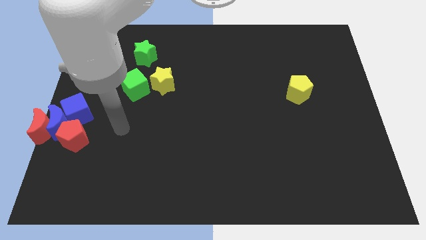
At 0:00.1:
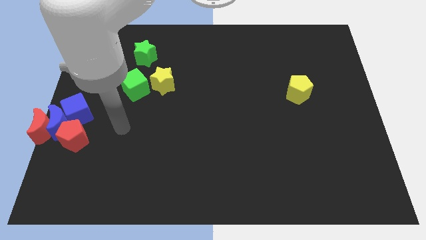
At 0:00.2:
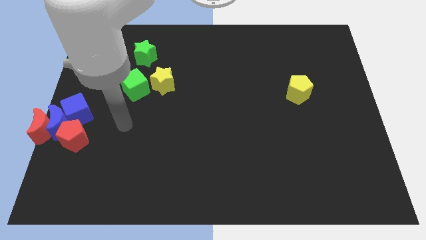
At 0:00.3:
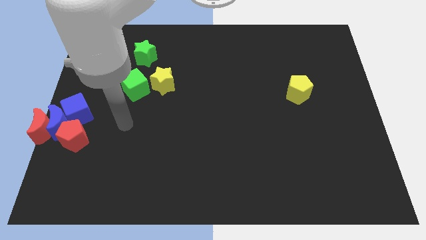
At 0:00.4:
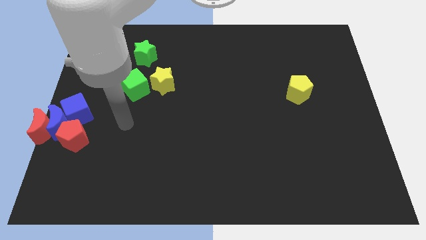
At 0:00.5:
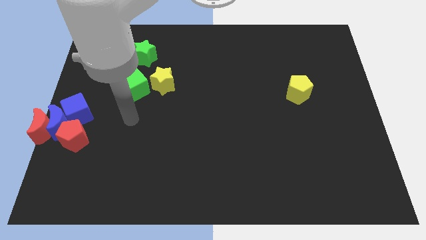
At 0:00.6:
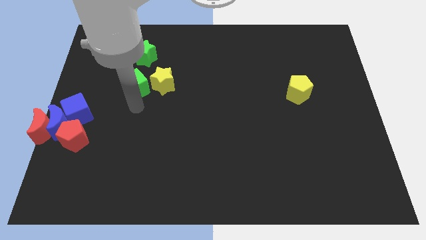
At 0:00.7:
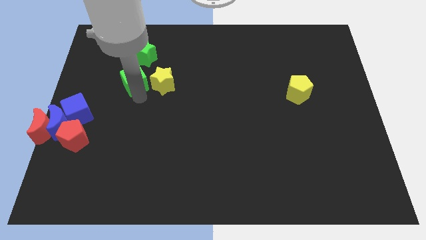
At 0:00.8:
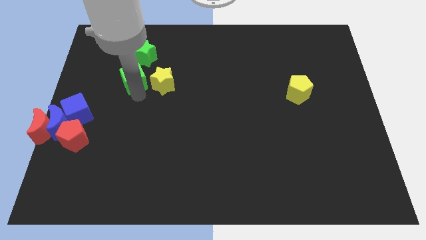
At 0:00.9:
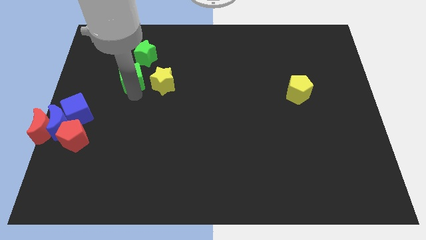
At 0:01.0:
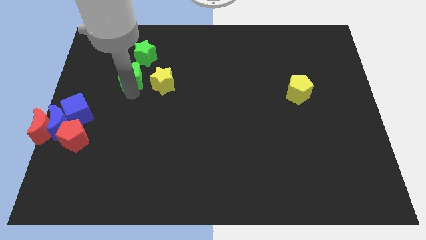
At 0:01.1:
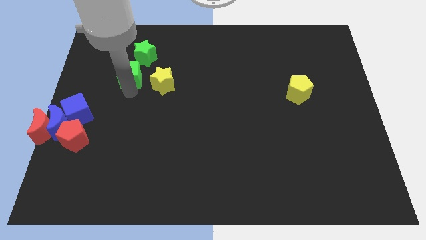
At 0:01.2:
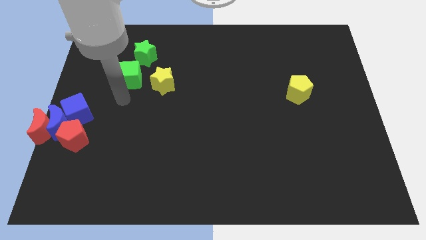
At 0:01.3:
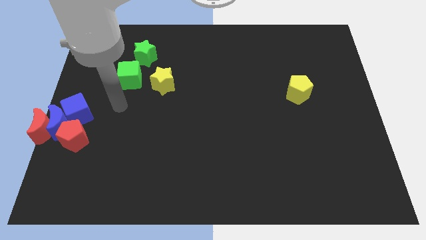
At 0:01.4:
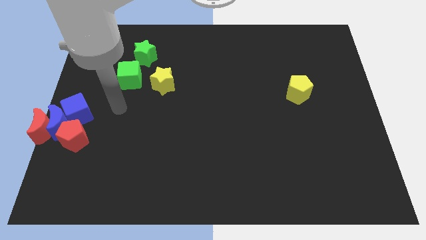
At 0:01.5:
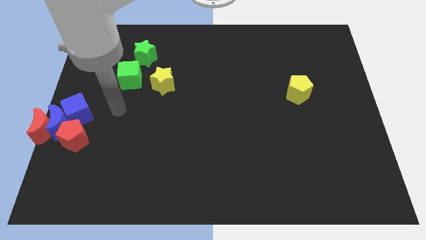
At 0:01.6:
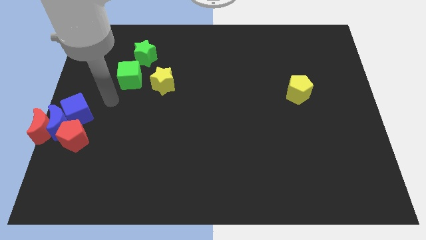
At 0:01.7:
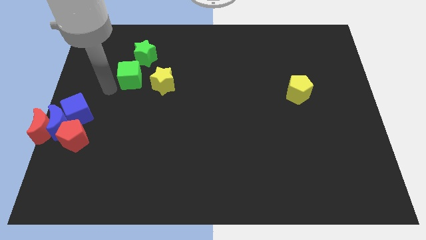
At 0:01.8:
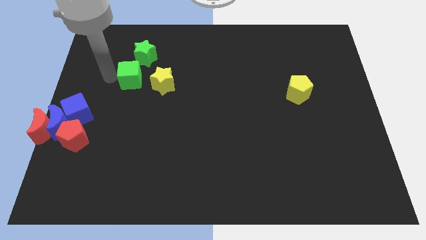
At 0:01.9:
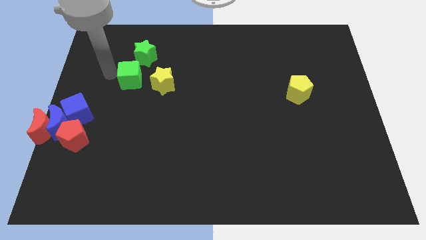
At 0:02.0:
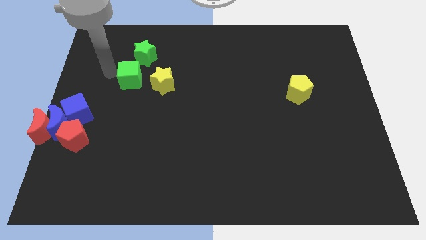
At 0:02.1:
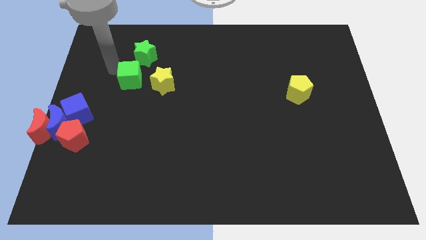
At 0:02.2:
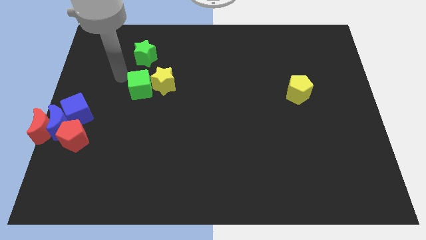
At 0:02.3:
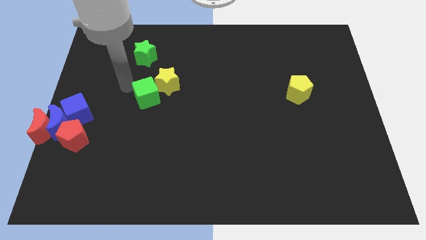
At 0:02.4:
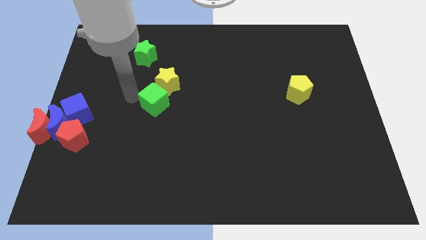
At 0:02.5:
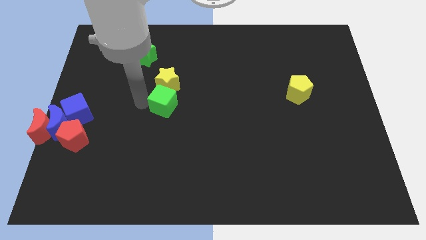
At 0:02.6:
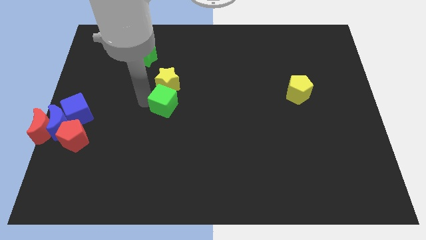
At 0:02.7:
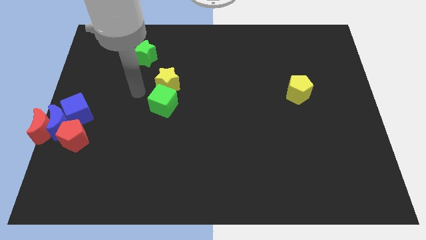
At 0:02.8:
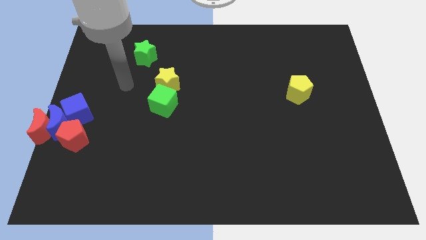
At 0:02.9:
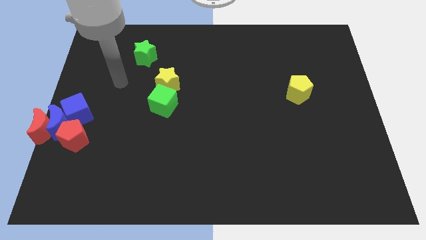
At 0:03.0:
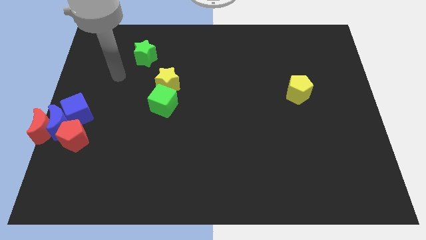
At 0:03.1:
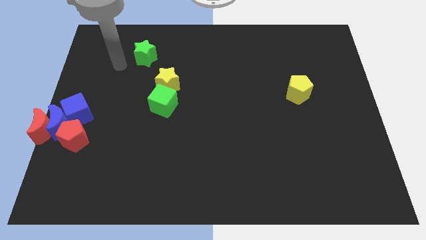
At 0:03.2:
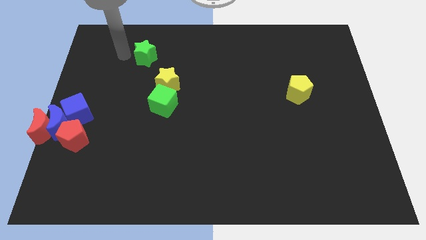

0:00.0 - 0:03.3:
drag the green cube to the bottom of the yellow star

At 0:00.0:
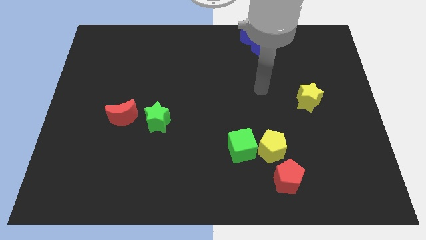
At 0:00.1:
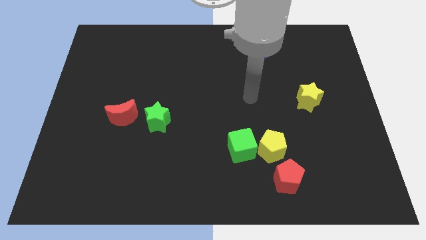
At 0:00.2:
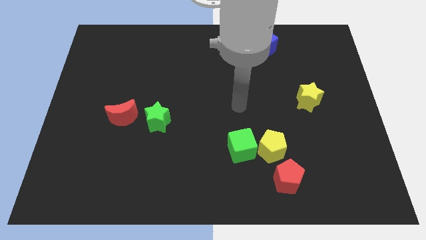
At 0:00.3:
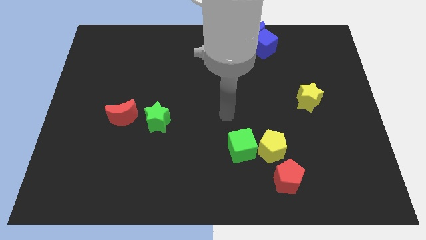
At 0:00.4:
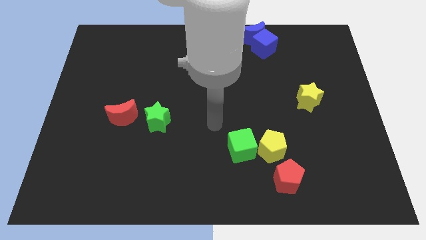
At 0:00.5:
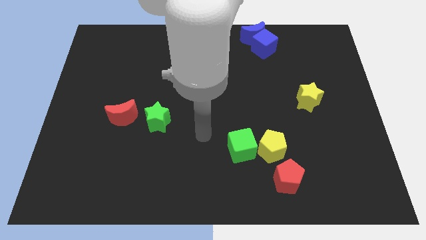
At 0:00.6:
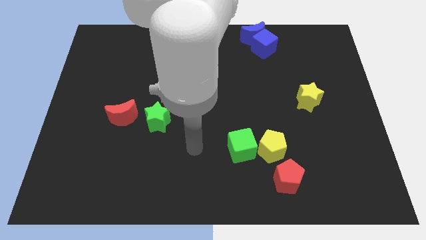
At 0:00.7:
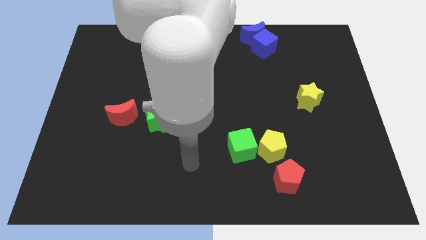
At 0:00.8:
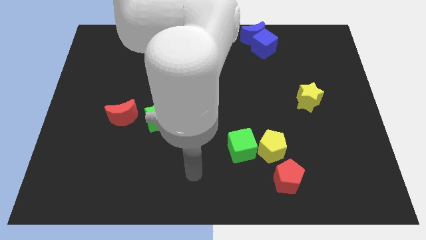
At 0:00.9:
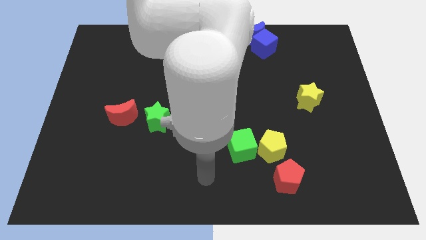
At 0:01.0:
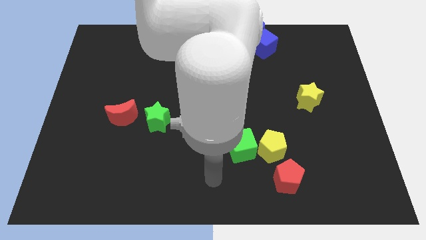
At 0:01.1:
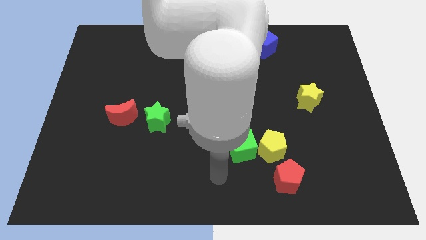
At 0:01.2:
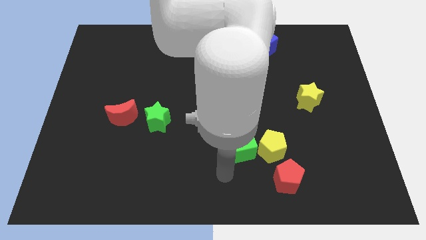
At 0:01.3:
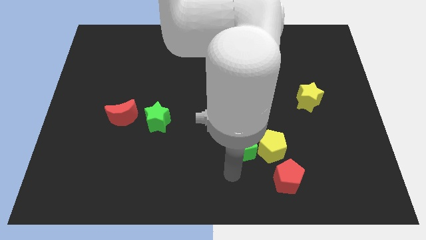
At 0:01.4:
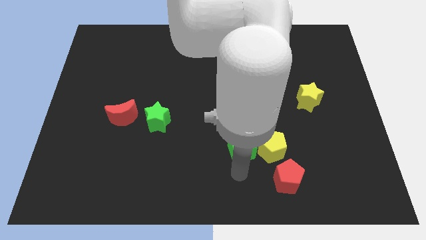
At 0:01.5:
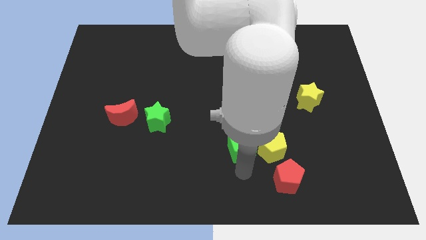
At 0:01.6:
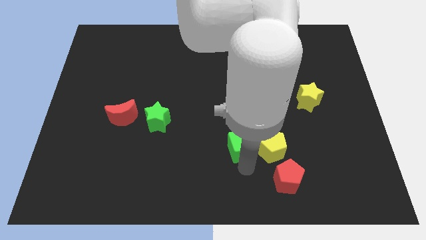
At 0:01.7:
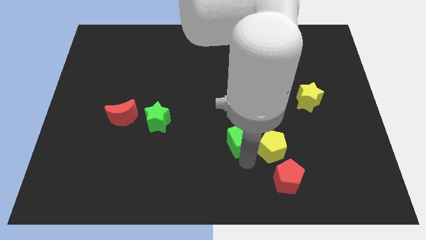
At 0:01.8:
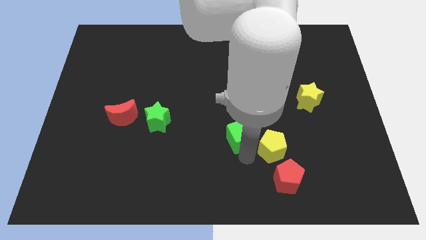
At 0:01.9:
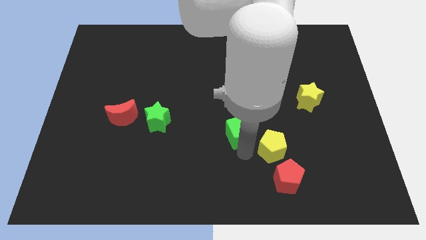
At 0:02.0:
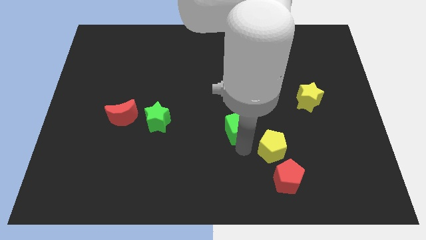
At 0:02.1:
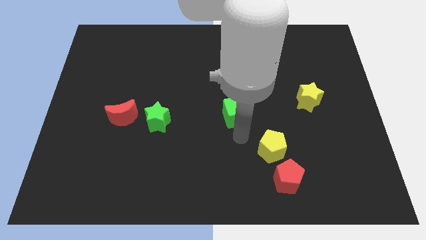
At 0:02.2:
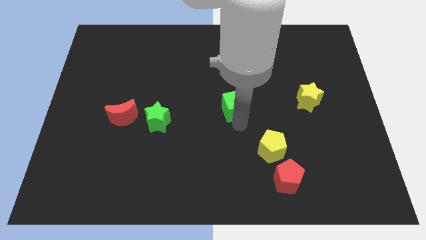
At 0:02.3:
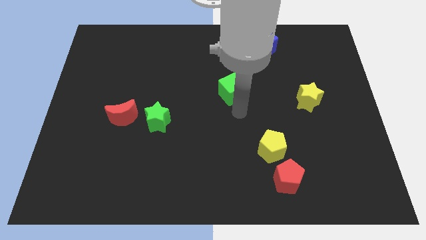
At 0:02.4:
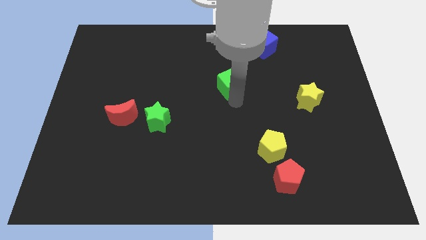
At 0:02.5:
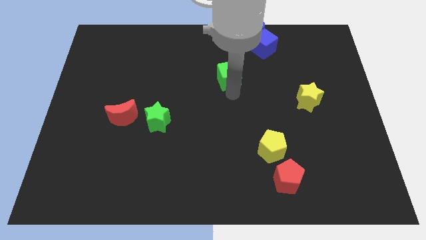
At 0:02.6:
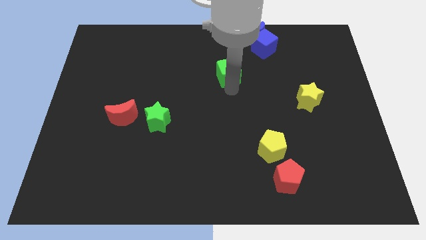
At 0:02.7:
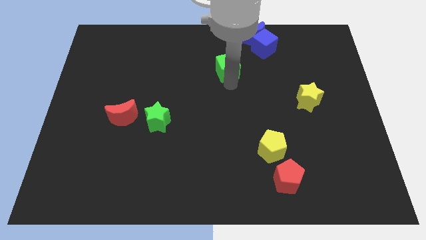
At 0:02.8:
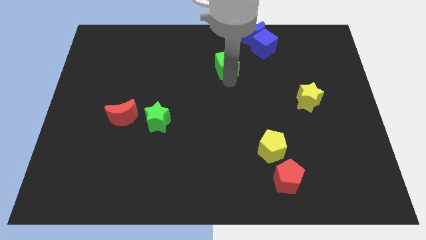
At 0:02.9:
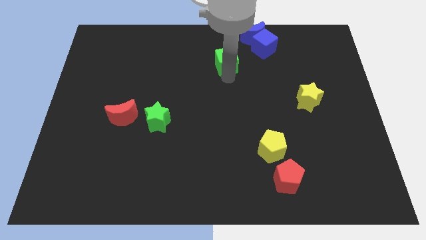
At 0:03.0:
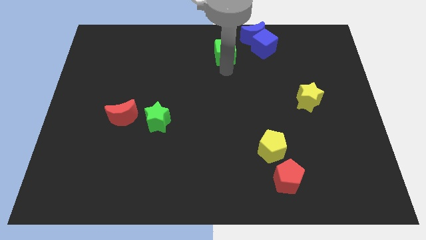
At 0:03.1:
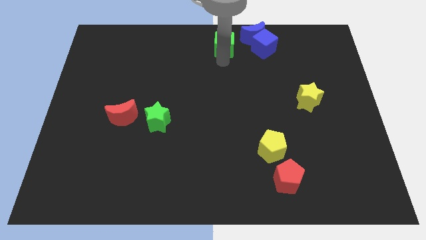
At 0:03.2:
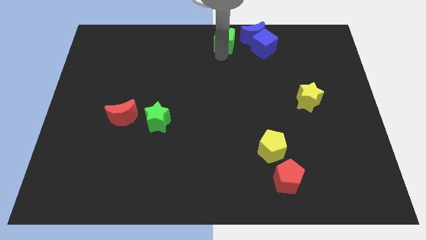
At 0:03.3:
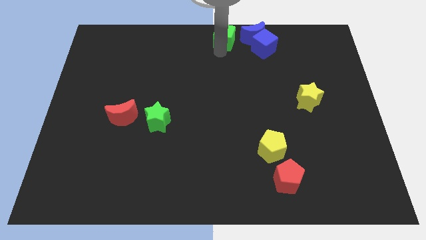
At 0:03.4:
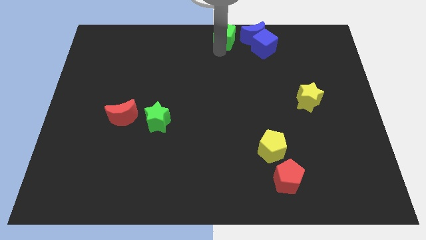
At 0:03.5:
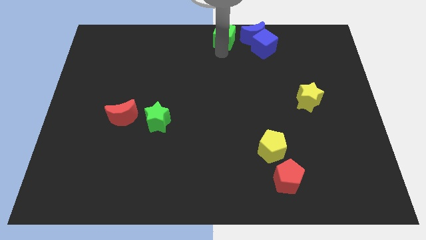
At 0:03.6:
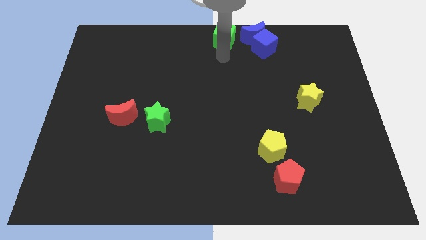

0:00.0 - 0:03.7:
place the green cube at top center of the board

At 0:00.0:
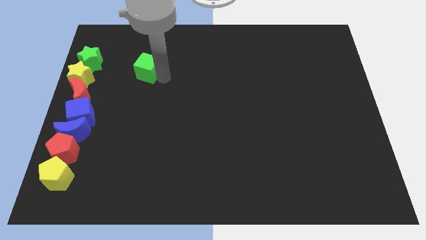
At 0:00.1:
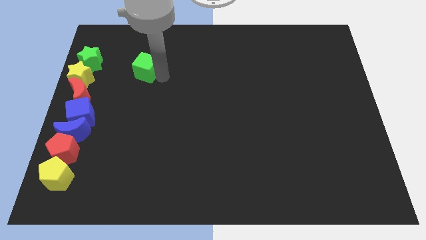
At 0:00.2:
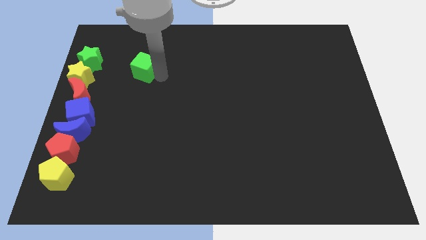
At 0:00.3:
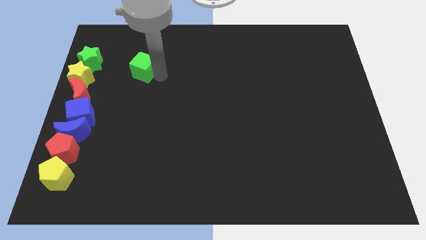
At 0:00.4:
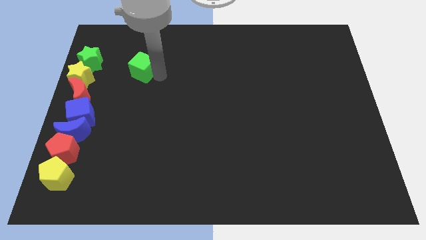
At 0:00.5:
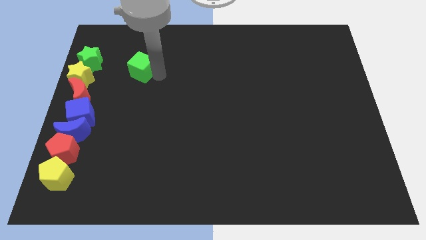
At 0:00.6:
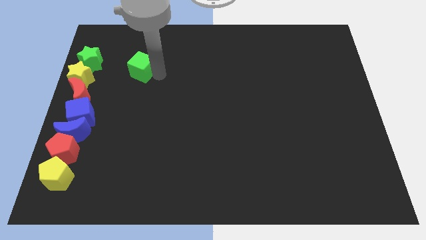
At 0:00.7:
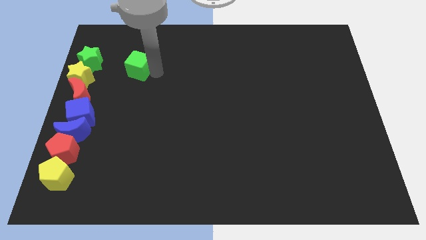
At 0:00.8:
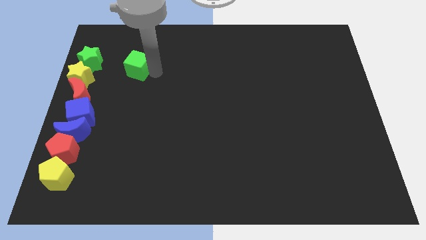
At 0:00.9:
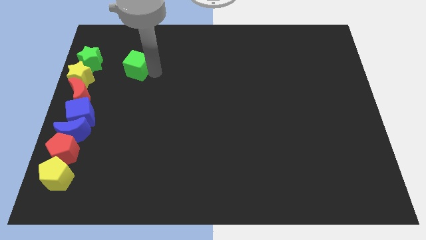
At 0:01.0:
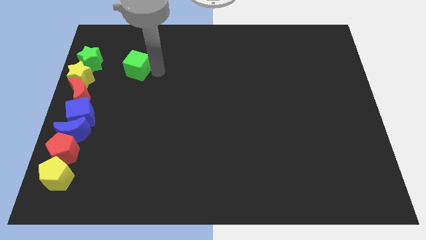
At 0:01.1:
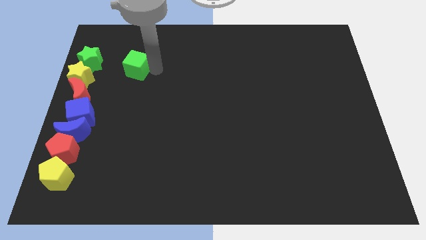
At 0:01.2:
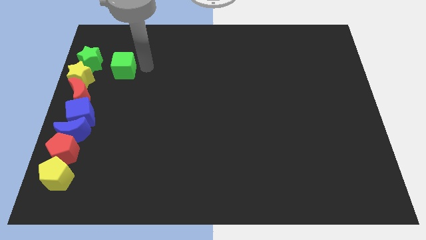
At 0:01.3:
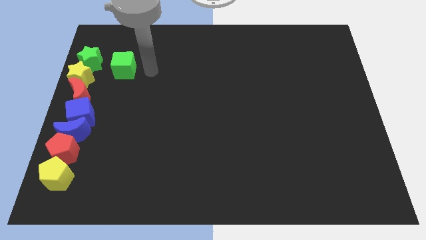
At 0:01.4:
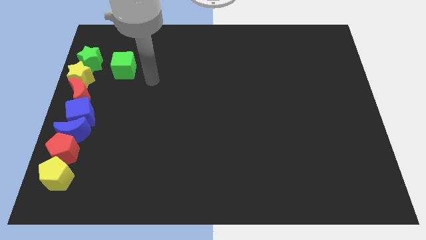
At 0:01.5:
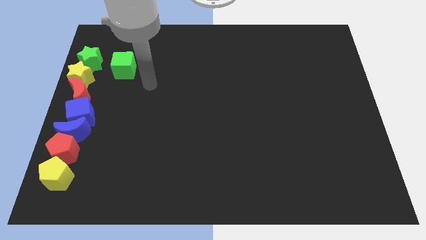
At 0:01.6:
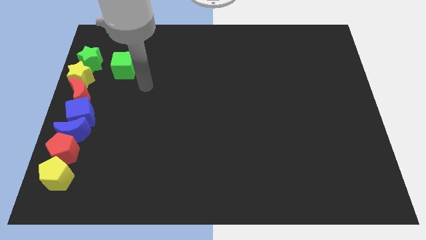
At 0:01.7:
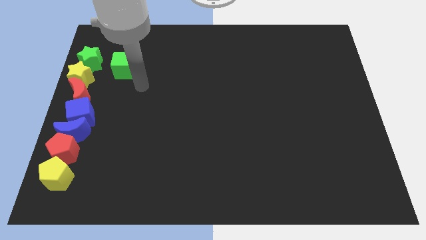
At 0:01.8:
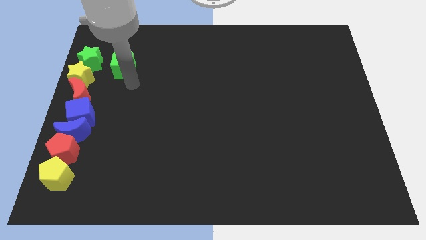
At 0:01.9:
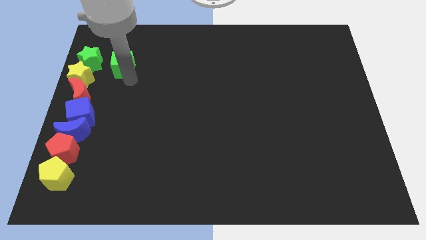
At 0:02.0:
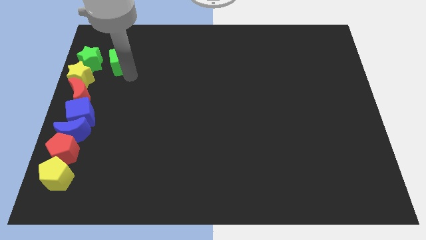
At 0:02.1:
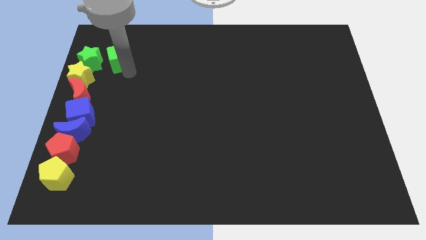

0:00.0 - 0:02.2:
place green cube beside green star
